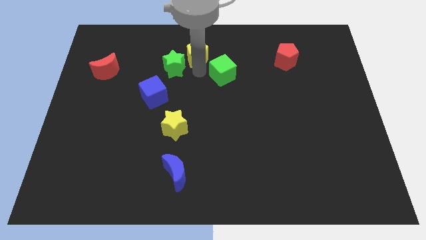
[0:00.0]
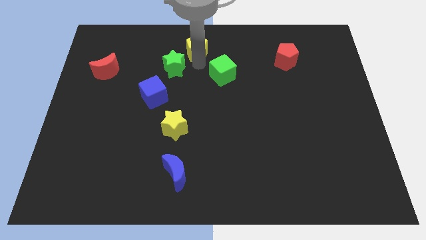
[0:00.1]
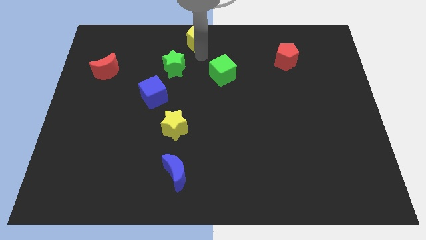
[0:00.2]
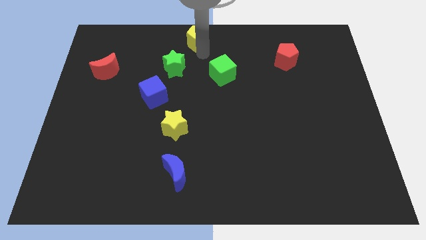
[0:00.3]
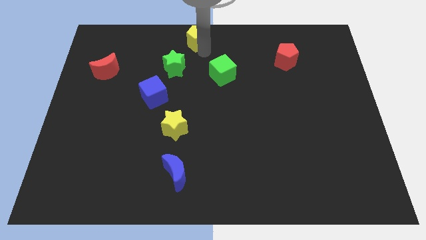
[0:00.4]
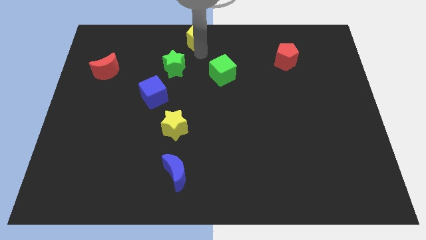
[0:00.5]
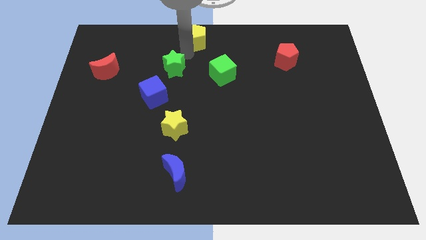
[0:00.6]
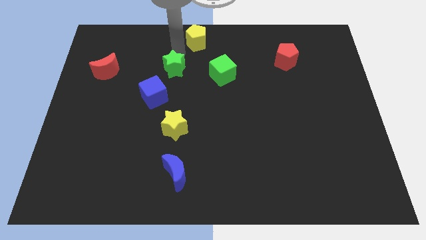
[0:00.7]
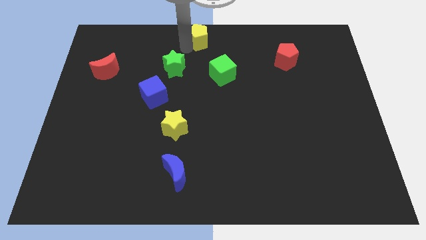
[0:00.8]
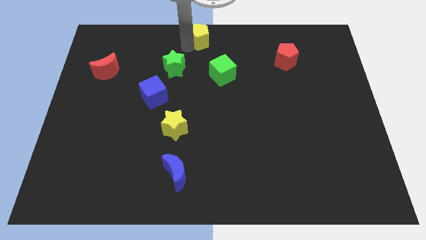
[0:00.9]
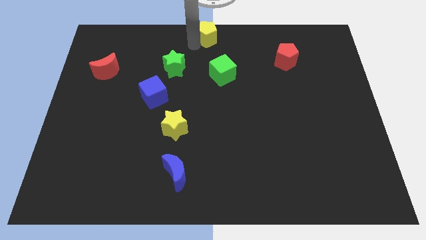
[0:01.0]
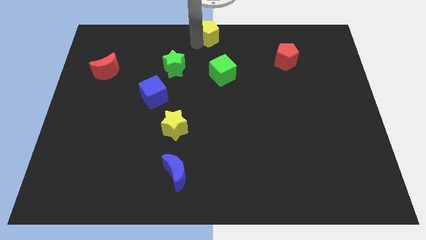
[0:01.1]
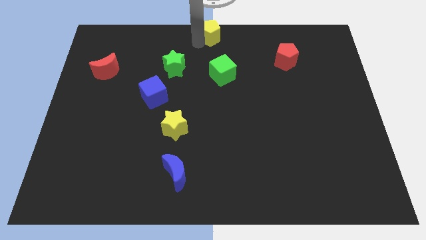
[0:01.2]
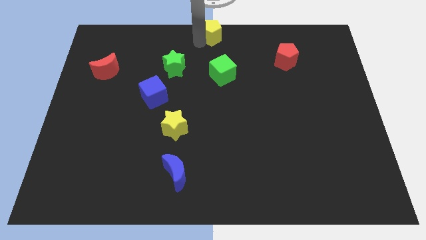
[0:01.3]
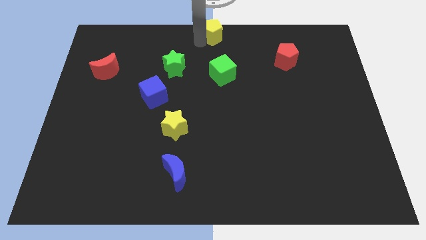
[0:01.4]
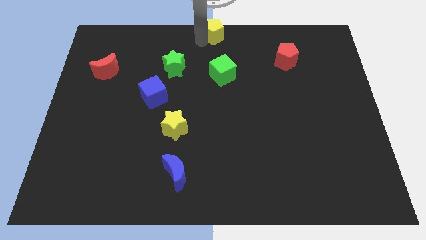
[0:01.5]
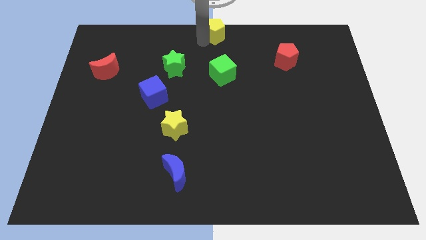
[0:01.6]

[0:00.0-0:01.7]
place the yellow pentagon at the top centre of the board

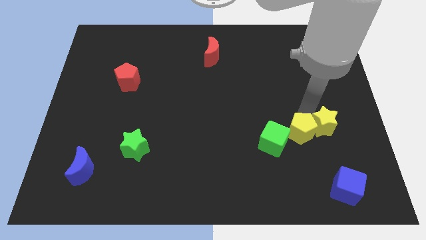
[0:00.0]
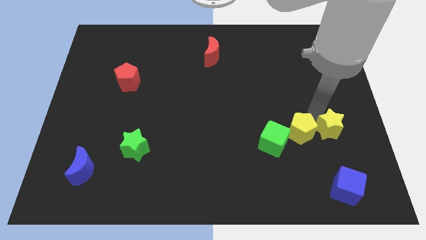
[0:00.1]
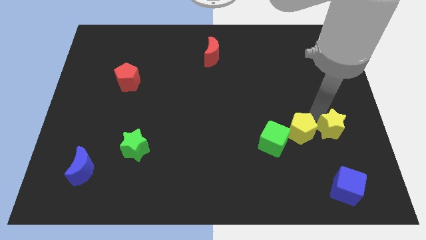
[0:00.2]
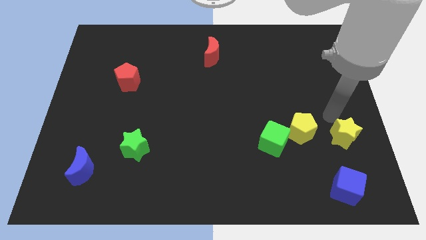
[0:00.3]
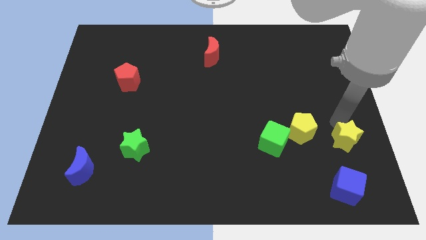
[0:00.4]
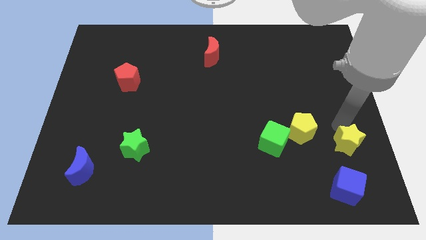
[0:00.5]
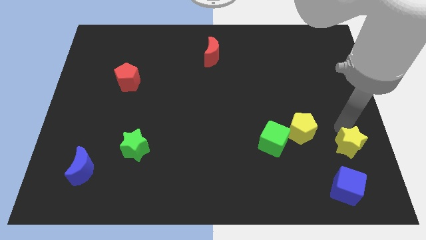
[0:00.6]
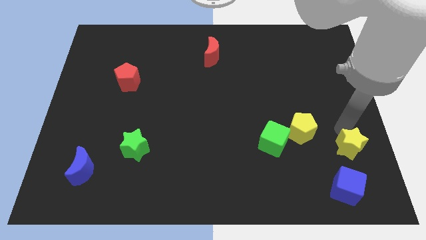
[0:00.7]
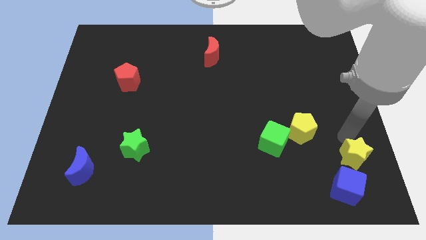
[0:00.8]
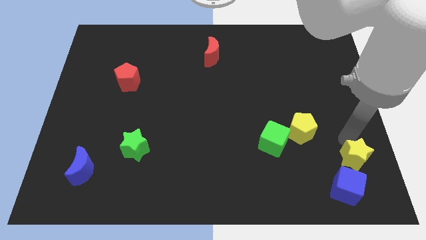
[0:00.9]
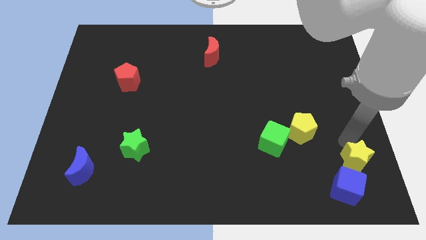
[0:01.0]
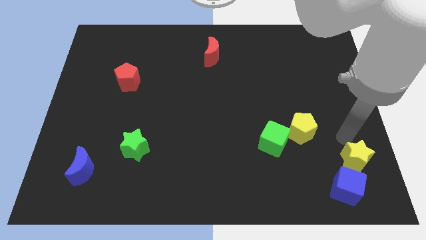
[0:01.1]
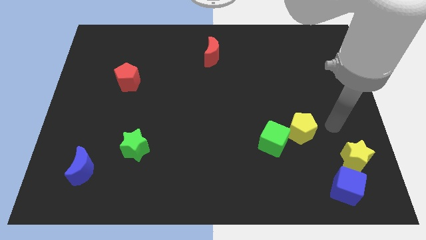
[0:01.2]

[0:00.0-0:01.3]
move yellow star away from the yellow pentagon

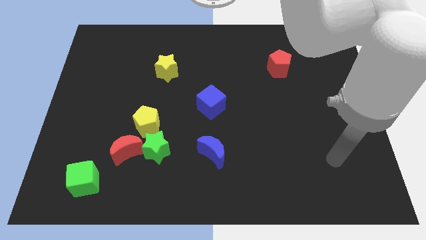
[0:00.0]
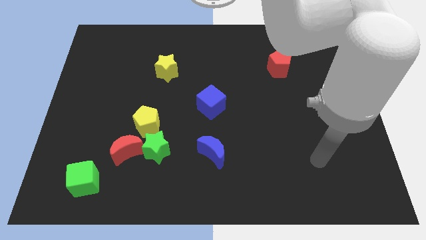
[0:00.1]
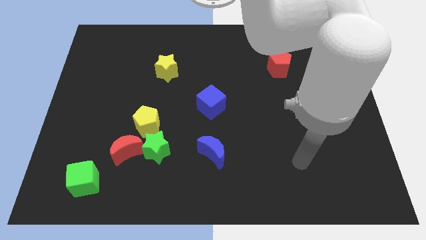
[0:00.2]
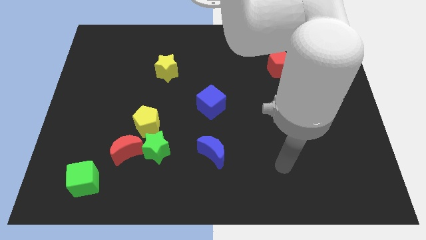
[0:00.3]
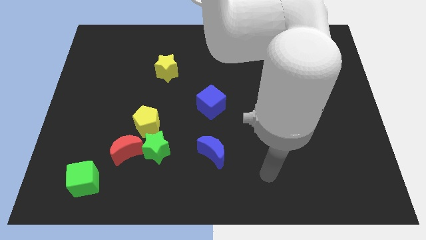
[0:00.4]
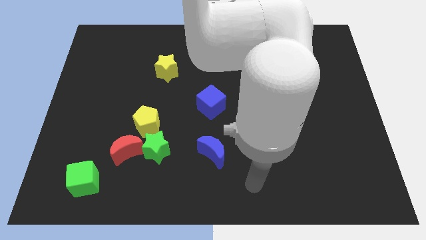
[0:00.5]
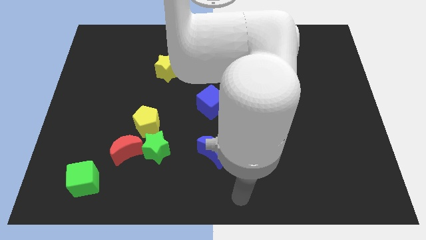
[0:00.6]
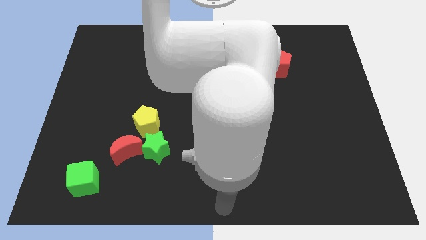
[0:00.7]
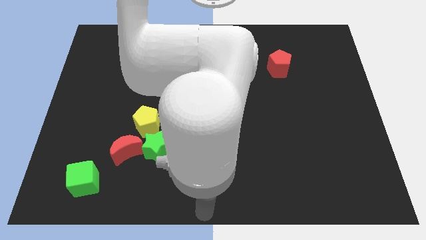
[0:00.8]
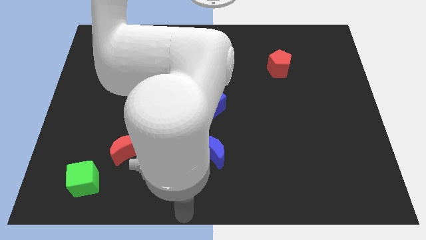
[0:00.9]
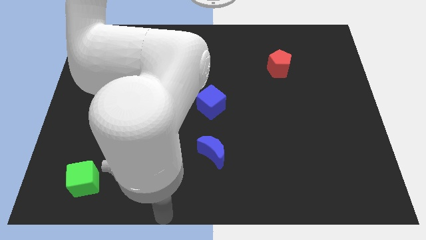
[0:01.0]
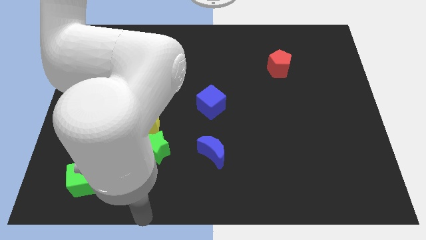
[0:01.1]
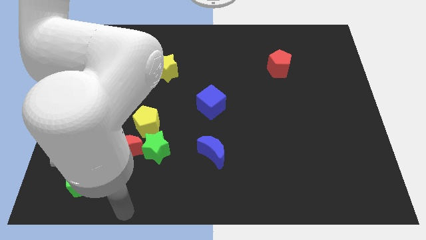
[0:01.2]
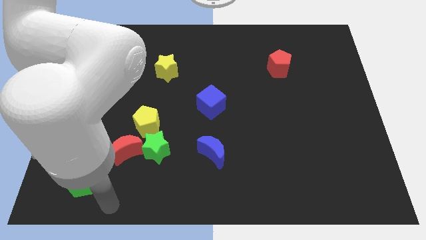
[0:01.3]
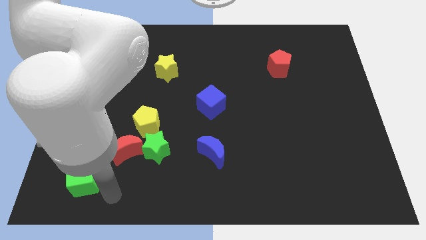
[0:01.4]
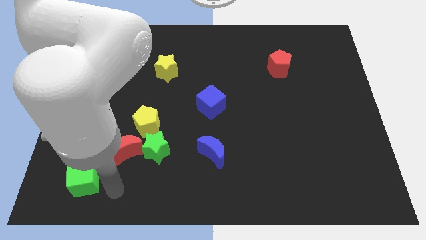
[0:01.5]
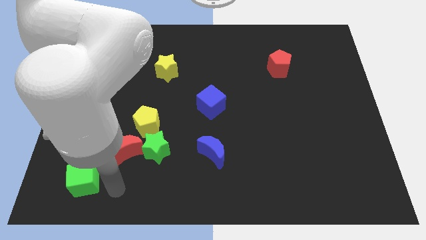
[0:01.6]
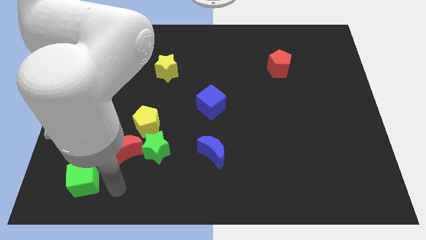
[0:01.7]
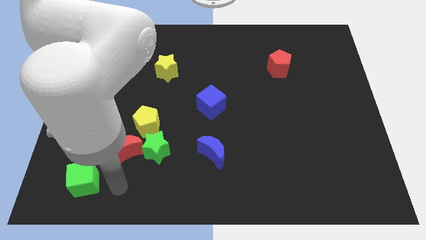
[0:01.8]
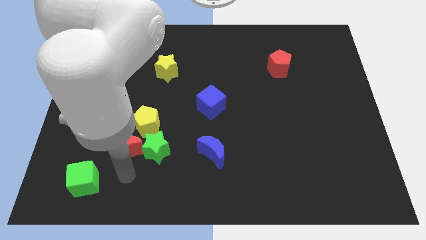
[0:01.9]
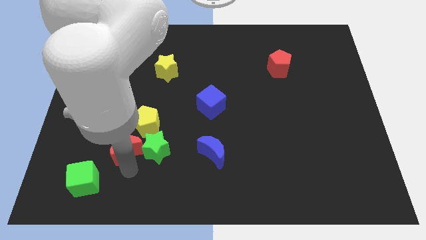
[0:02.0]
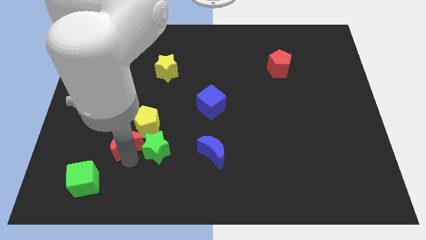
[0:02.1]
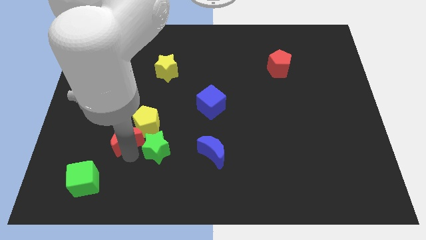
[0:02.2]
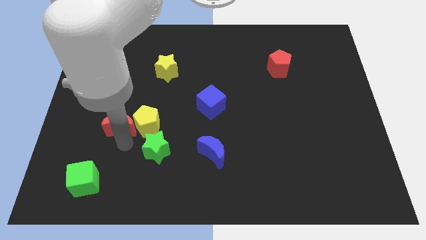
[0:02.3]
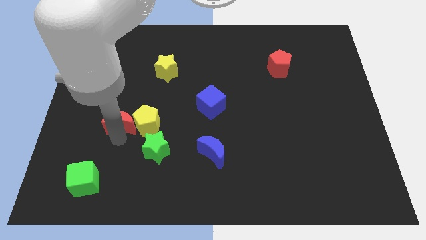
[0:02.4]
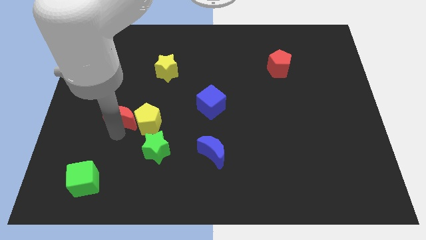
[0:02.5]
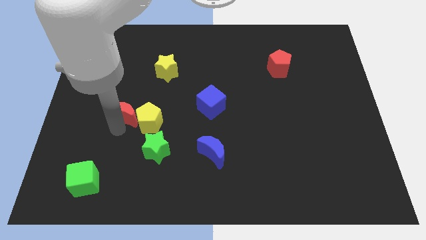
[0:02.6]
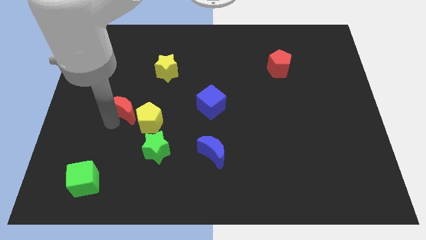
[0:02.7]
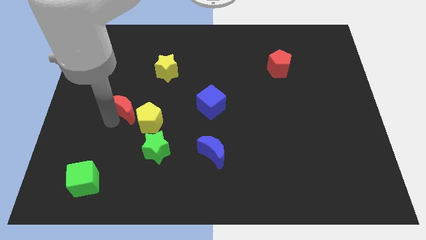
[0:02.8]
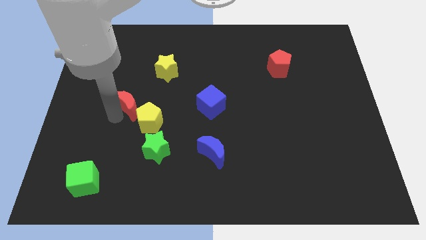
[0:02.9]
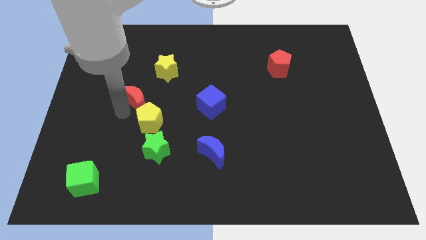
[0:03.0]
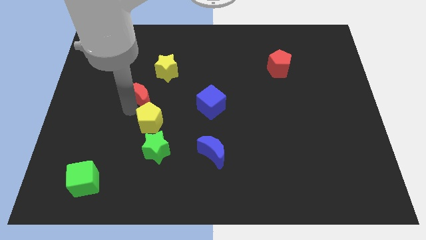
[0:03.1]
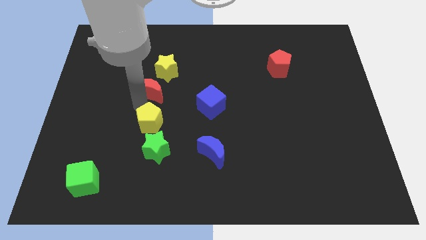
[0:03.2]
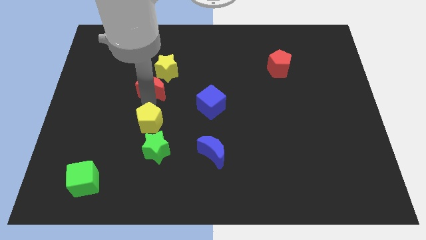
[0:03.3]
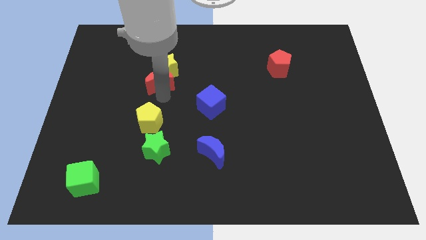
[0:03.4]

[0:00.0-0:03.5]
place the red moon below the yellow star

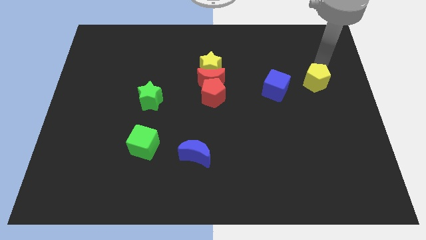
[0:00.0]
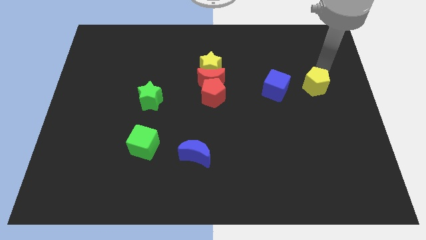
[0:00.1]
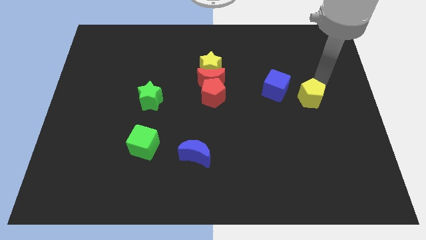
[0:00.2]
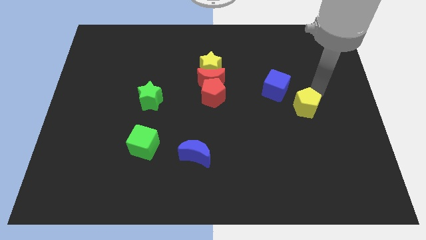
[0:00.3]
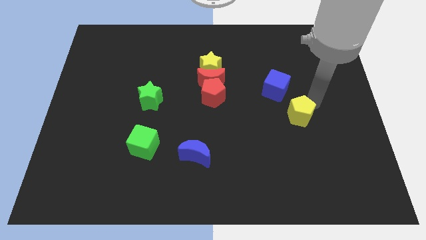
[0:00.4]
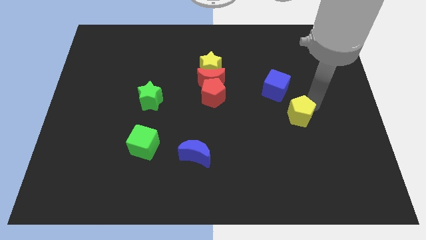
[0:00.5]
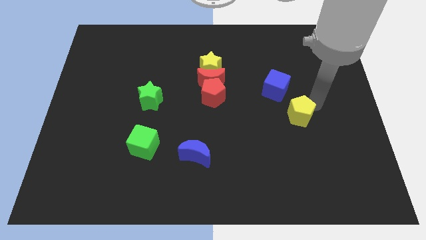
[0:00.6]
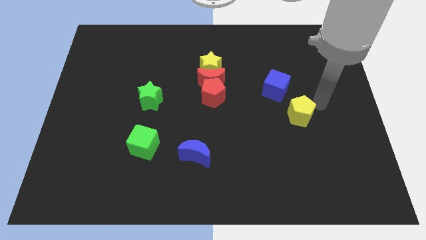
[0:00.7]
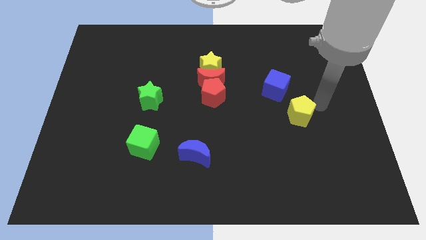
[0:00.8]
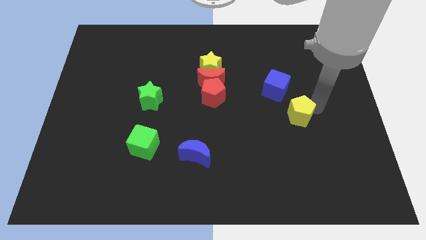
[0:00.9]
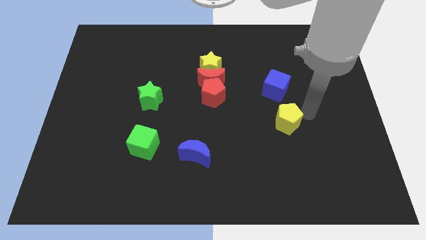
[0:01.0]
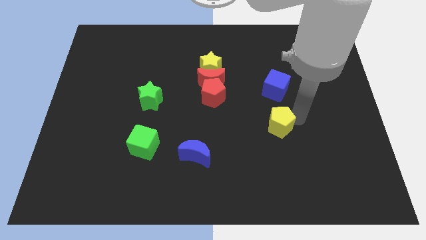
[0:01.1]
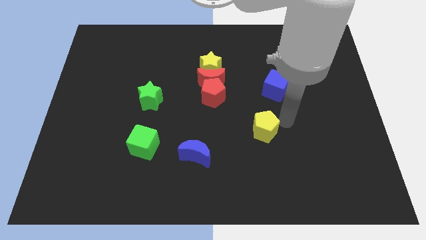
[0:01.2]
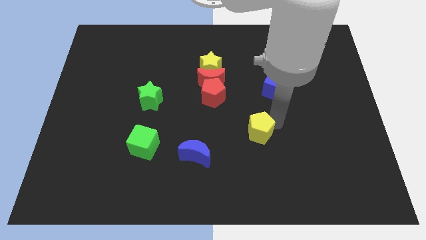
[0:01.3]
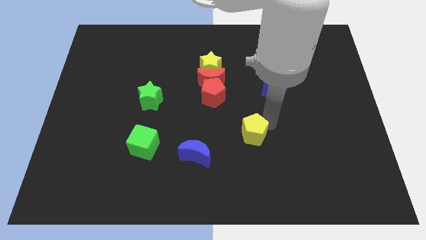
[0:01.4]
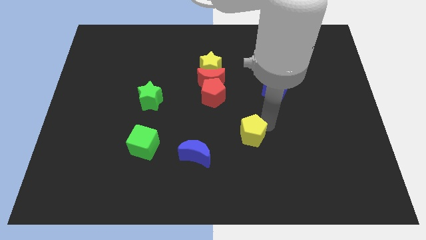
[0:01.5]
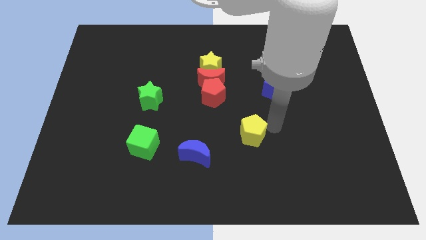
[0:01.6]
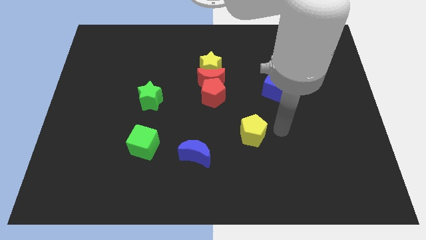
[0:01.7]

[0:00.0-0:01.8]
push the yellow penatgon diagonally to the top right of the blue moon

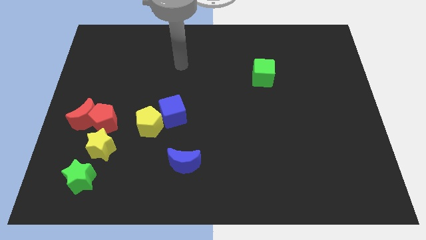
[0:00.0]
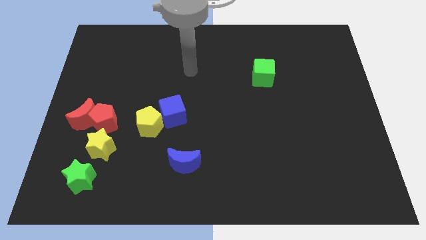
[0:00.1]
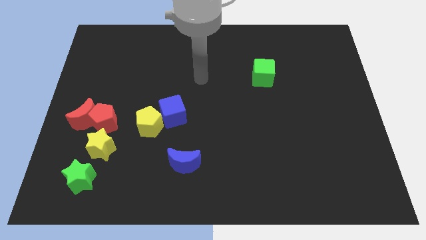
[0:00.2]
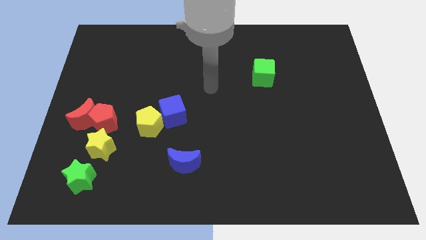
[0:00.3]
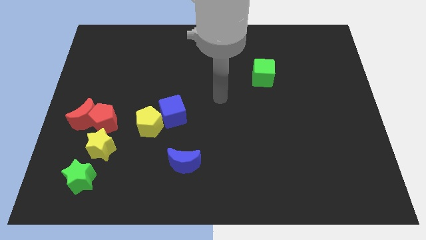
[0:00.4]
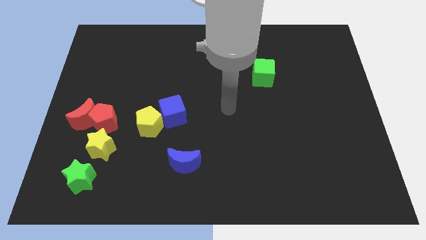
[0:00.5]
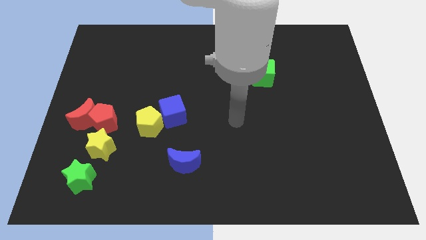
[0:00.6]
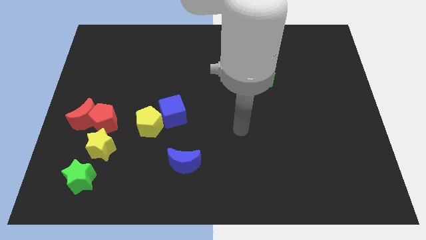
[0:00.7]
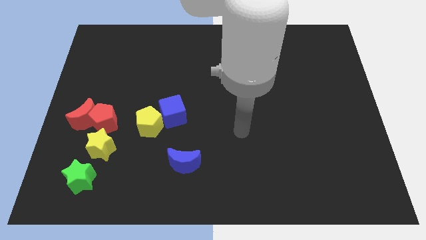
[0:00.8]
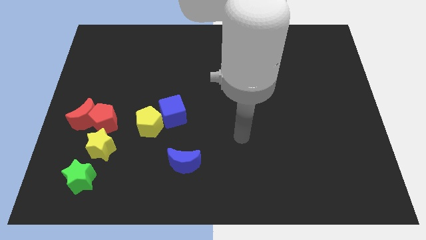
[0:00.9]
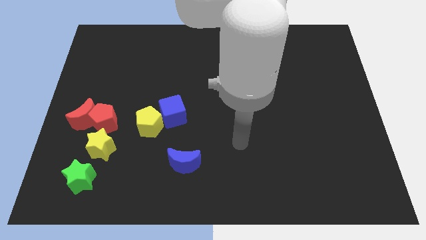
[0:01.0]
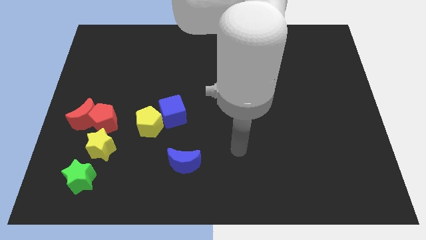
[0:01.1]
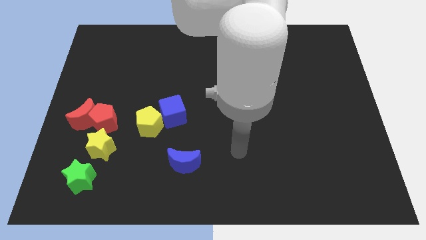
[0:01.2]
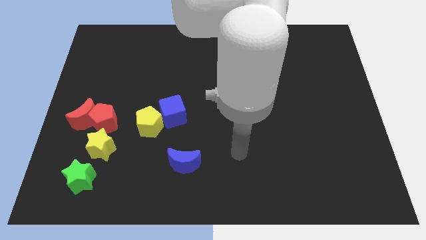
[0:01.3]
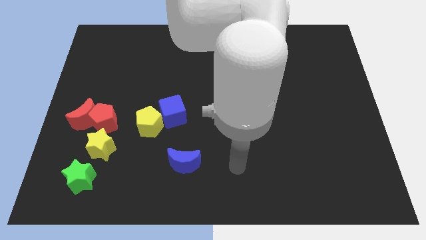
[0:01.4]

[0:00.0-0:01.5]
point the arm to the right of the blue moon
